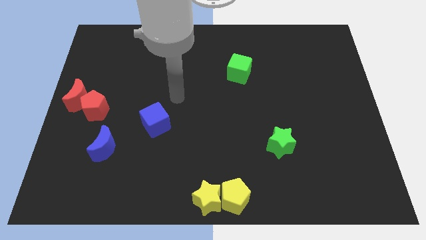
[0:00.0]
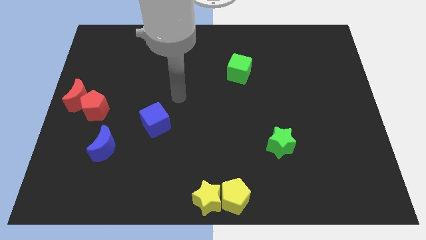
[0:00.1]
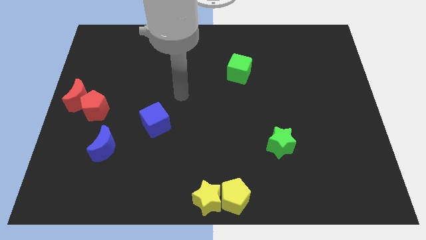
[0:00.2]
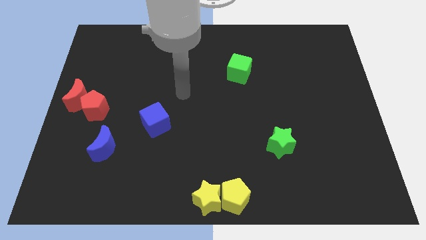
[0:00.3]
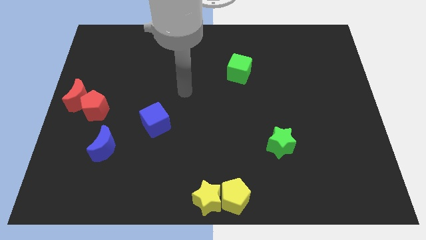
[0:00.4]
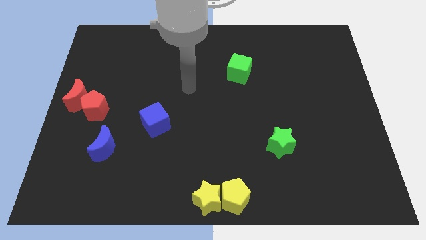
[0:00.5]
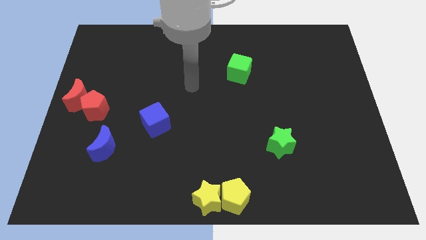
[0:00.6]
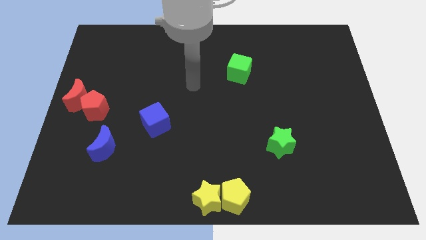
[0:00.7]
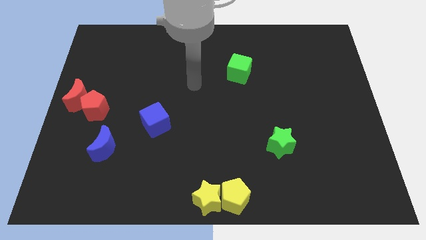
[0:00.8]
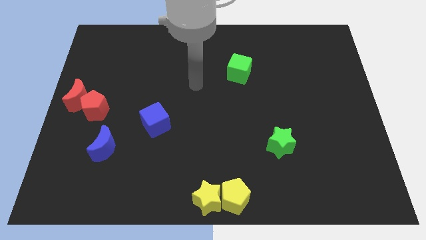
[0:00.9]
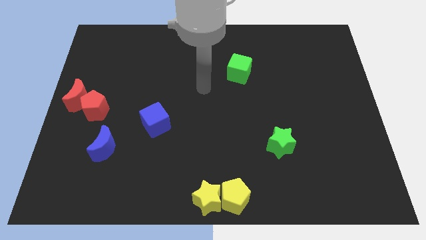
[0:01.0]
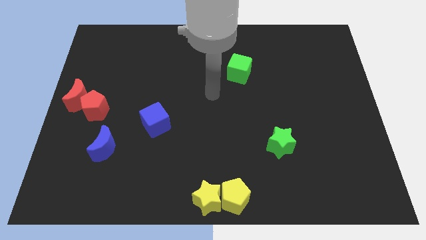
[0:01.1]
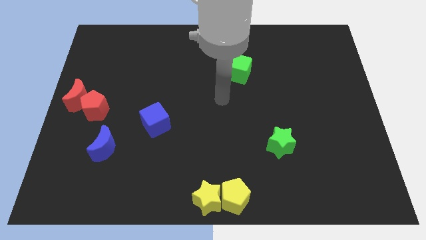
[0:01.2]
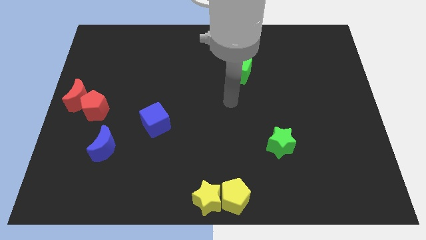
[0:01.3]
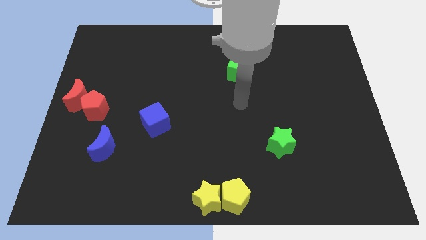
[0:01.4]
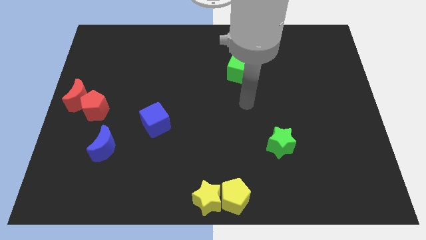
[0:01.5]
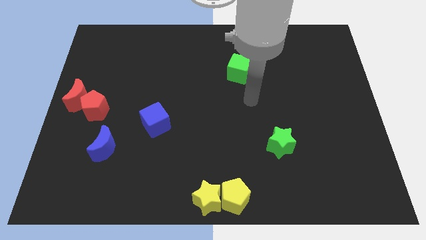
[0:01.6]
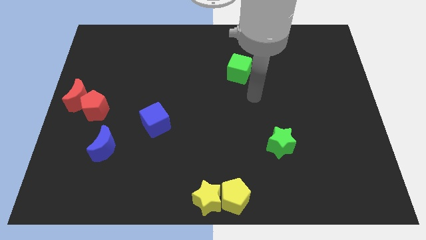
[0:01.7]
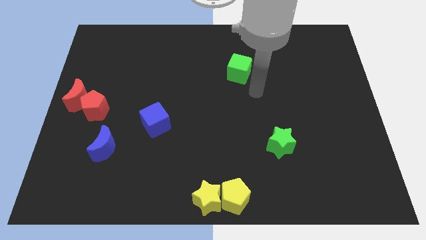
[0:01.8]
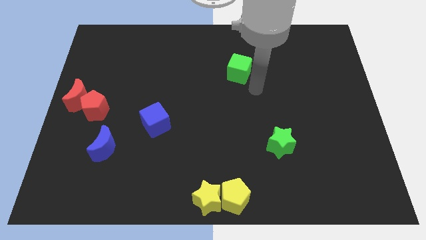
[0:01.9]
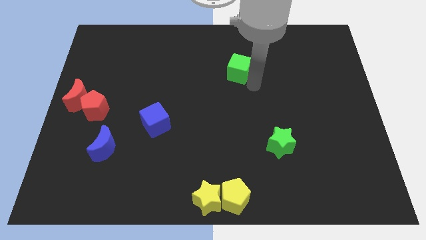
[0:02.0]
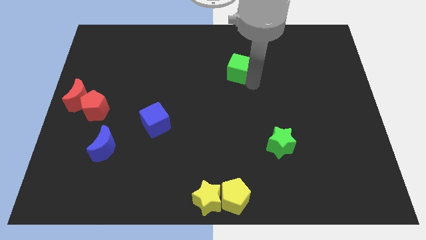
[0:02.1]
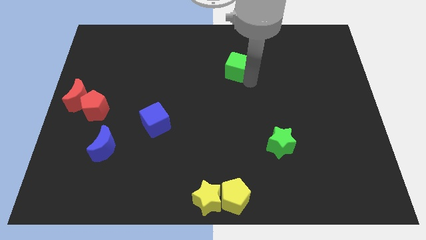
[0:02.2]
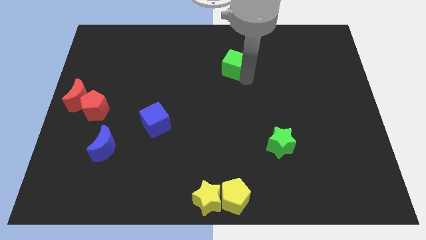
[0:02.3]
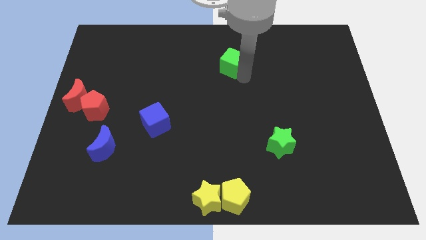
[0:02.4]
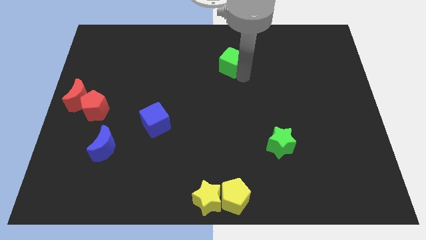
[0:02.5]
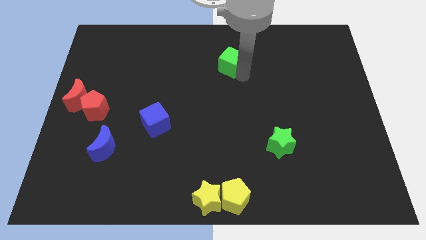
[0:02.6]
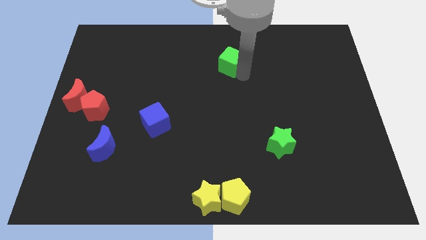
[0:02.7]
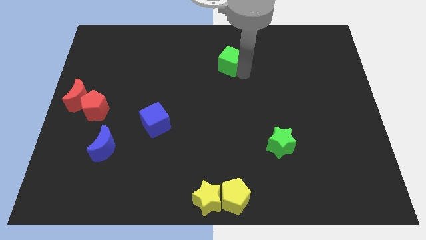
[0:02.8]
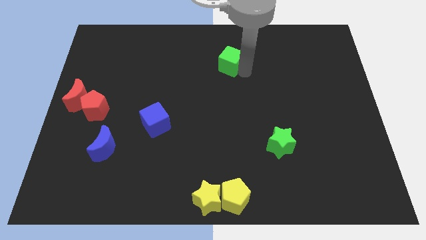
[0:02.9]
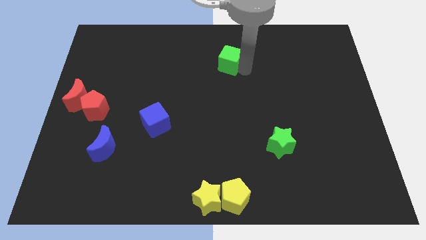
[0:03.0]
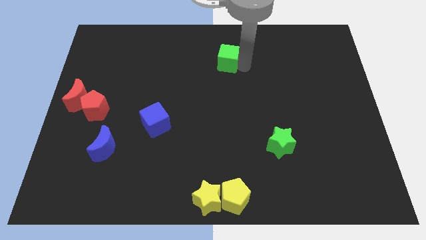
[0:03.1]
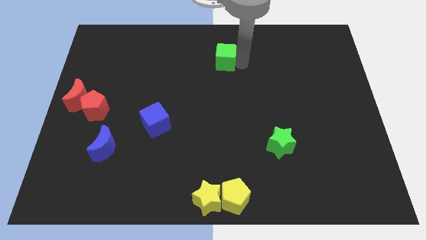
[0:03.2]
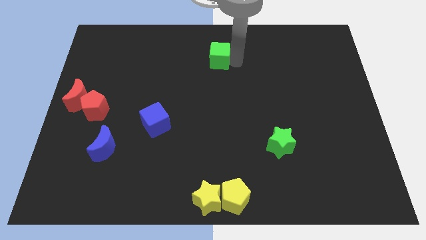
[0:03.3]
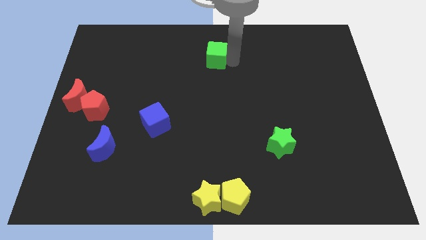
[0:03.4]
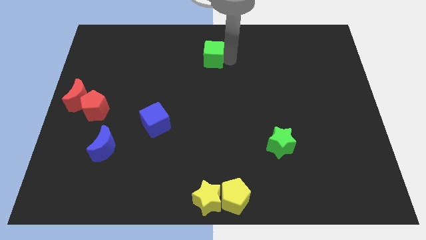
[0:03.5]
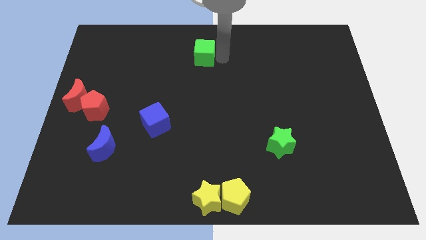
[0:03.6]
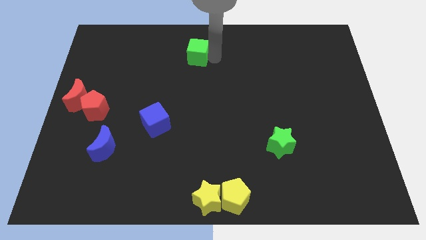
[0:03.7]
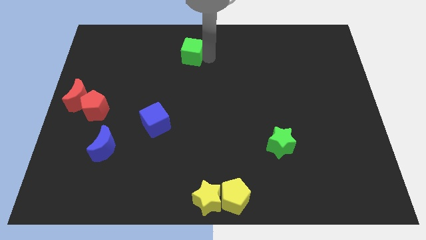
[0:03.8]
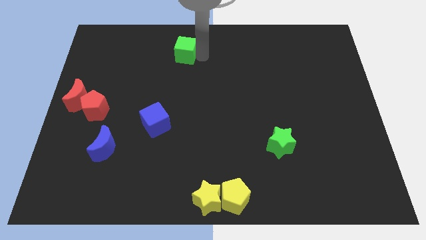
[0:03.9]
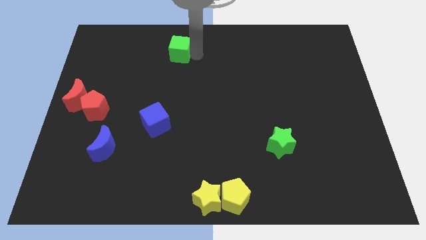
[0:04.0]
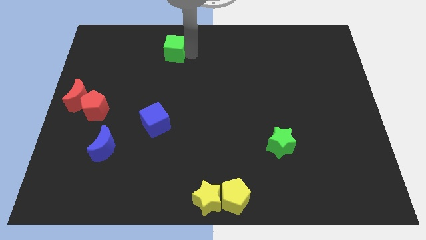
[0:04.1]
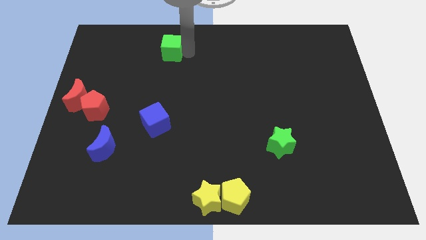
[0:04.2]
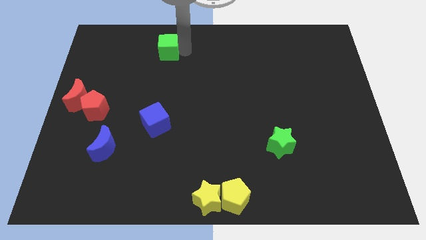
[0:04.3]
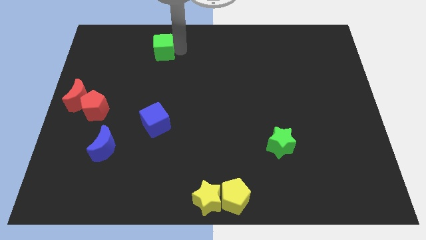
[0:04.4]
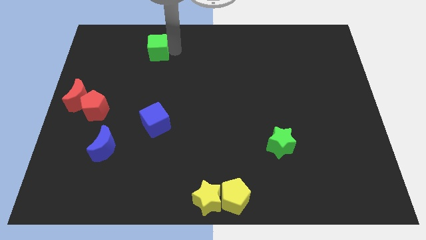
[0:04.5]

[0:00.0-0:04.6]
move the green cube vertically on the top side of the blue cube

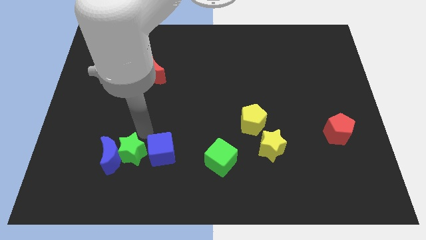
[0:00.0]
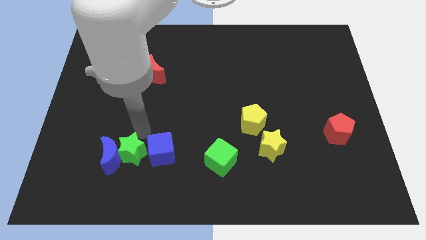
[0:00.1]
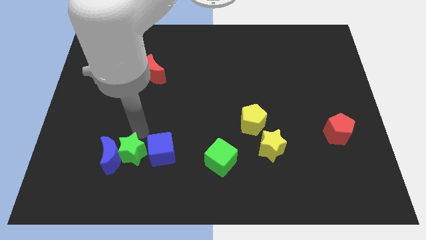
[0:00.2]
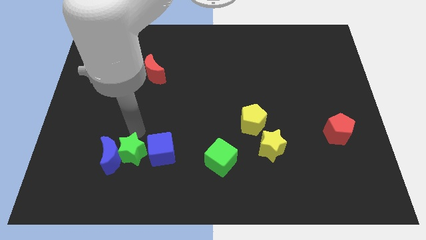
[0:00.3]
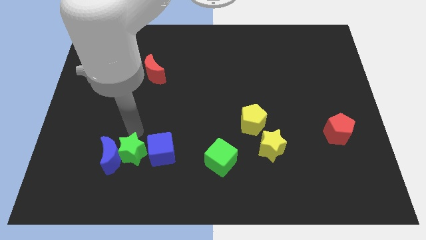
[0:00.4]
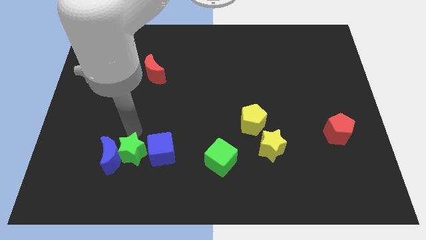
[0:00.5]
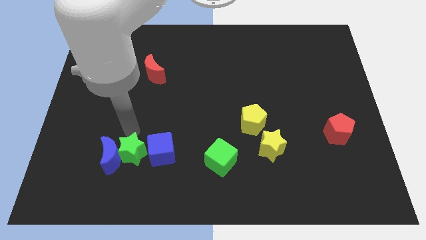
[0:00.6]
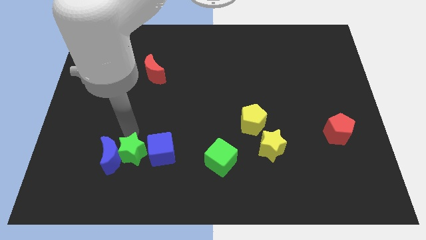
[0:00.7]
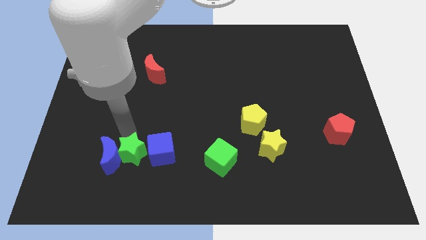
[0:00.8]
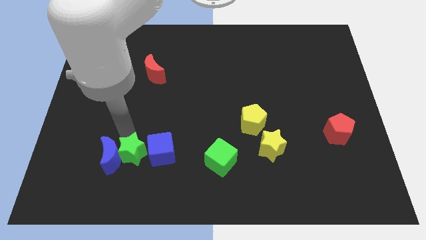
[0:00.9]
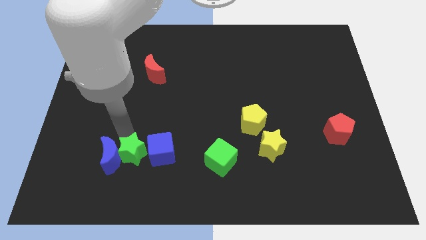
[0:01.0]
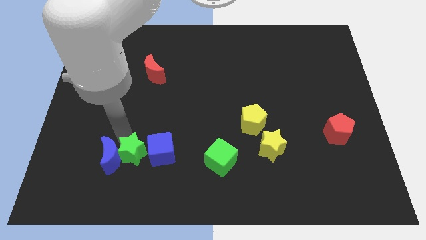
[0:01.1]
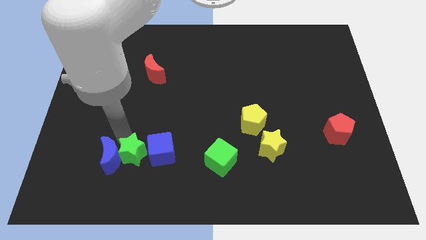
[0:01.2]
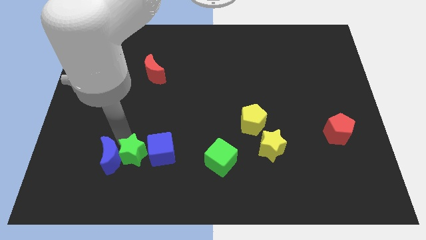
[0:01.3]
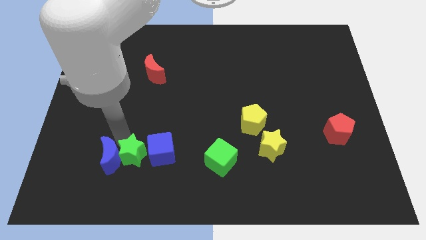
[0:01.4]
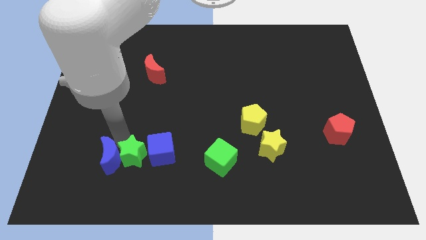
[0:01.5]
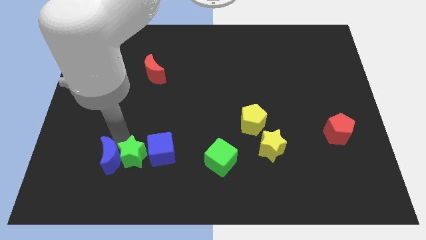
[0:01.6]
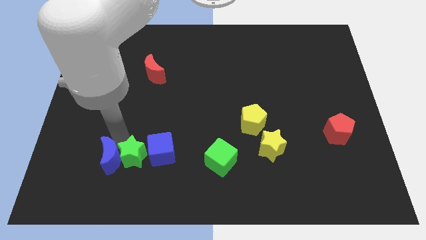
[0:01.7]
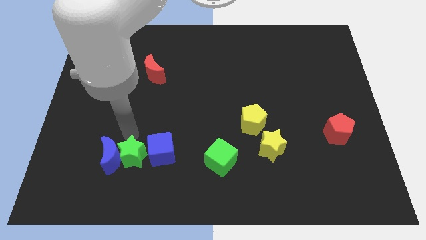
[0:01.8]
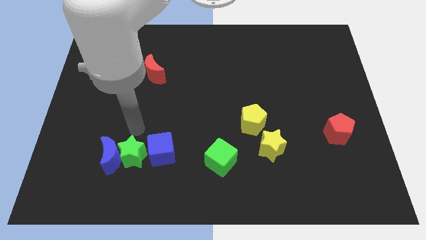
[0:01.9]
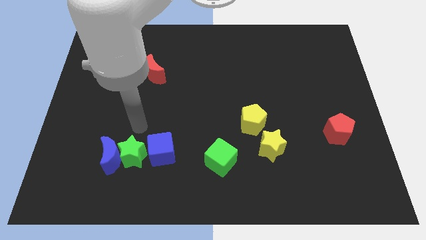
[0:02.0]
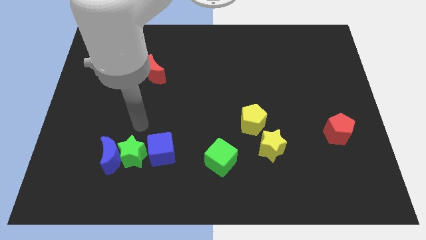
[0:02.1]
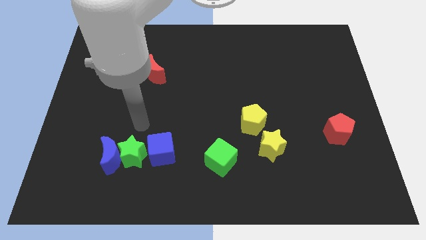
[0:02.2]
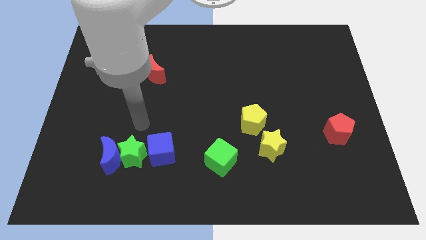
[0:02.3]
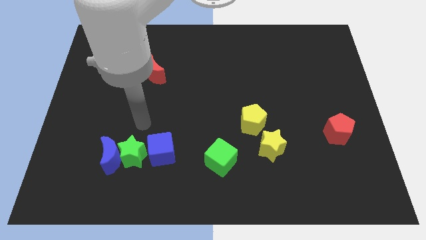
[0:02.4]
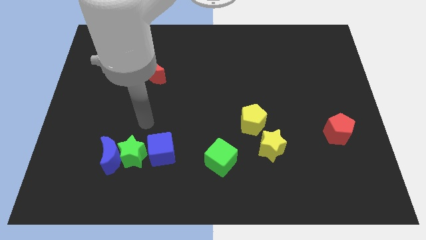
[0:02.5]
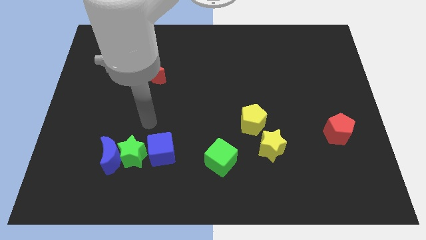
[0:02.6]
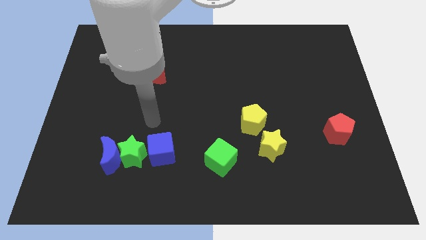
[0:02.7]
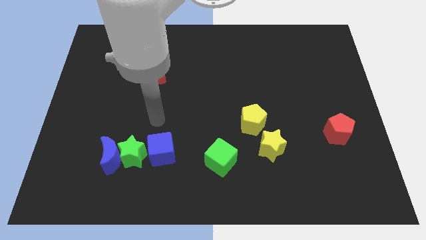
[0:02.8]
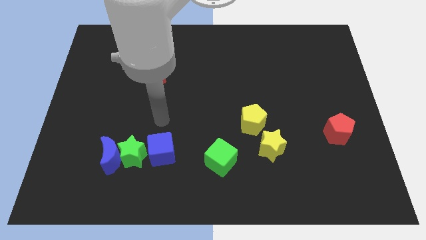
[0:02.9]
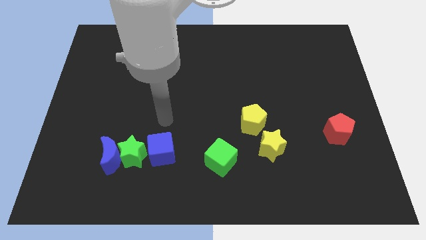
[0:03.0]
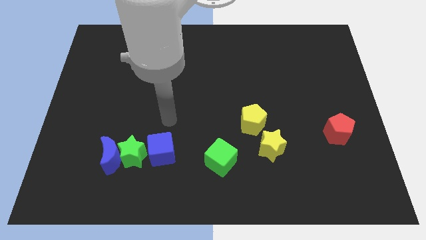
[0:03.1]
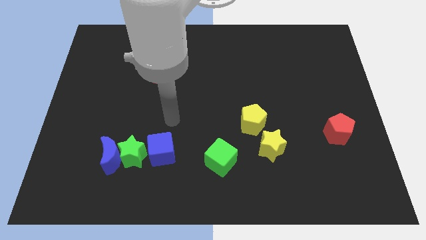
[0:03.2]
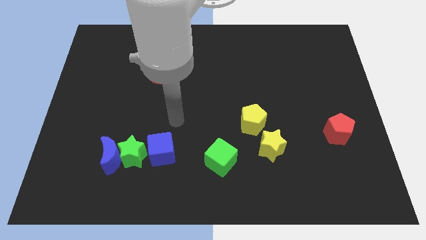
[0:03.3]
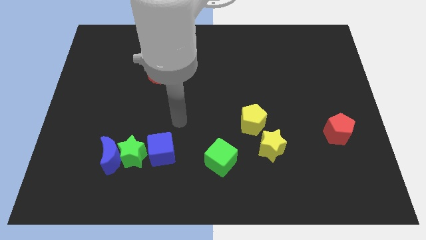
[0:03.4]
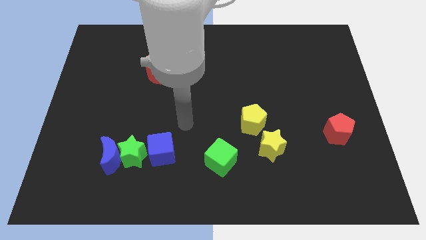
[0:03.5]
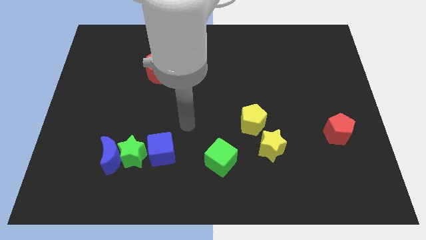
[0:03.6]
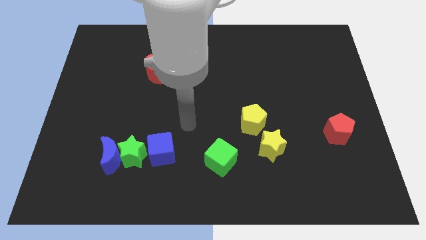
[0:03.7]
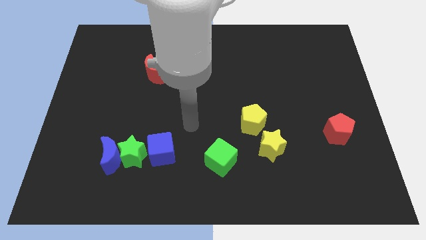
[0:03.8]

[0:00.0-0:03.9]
adjust the green star

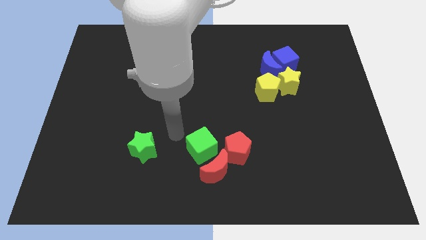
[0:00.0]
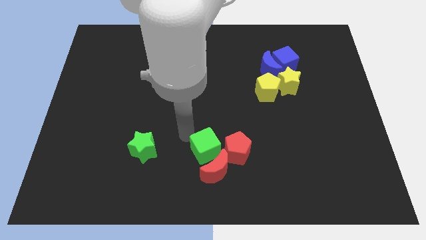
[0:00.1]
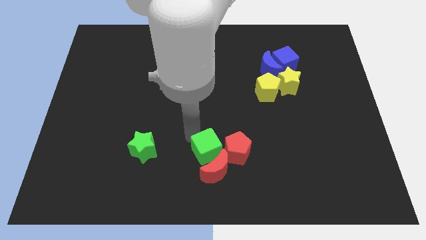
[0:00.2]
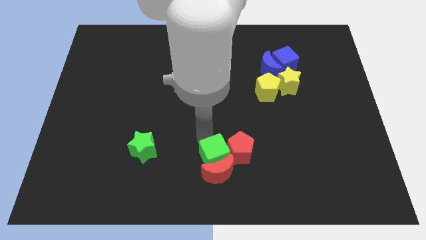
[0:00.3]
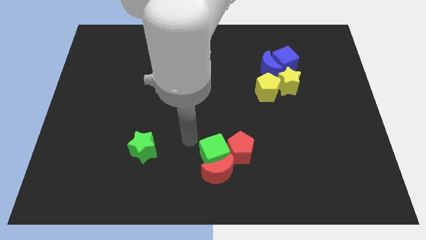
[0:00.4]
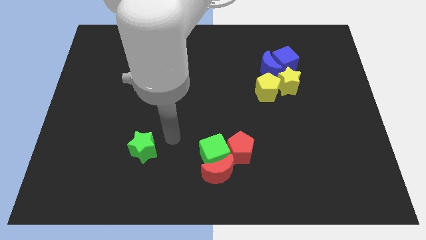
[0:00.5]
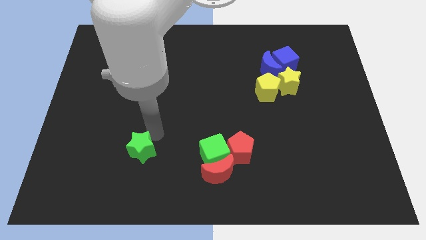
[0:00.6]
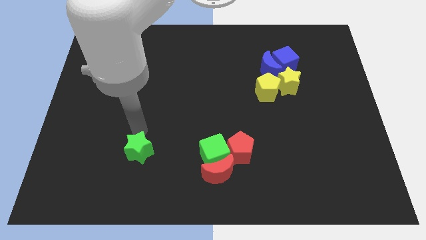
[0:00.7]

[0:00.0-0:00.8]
move the green cube into the red blocks
